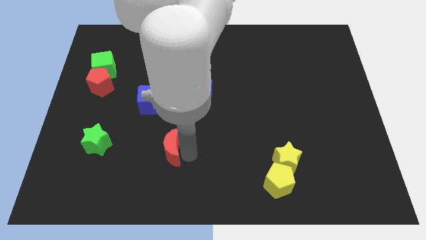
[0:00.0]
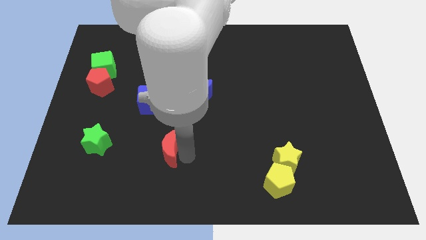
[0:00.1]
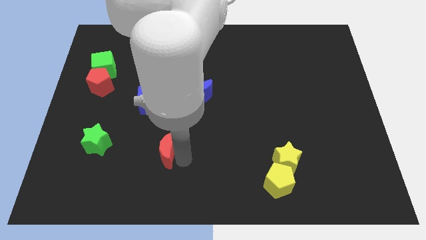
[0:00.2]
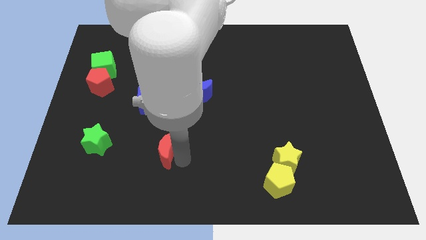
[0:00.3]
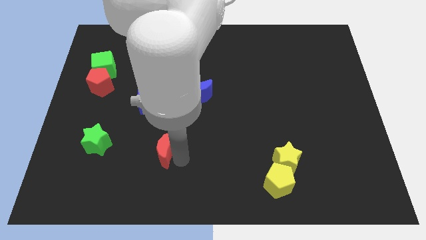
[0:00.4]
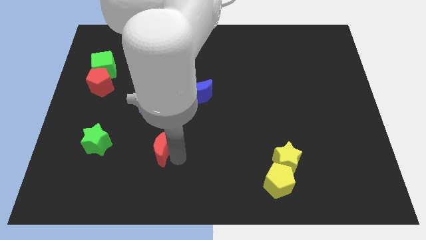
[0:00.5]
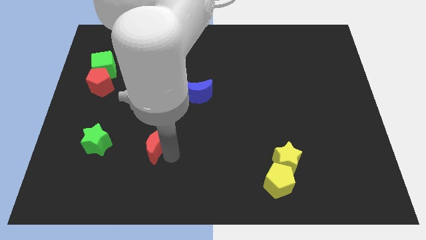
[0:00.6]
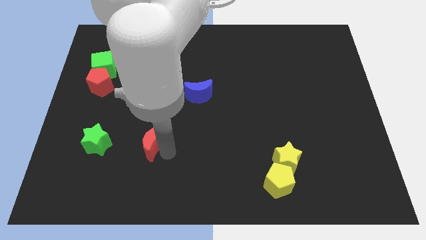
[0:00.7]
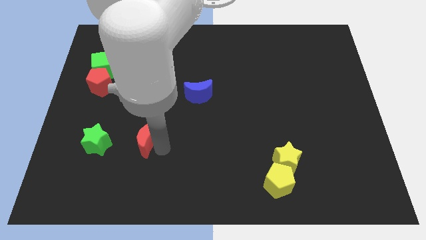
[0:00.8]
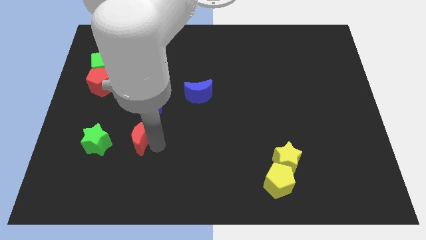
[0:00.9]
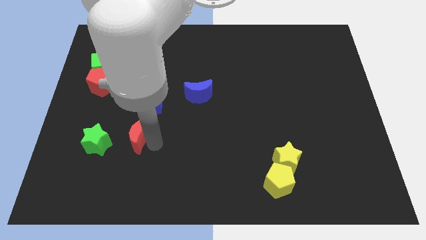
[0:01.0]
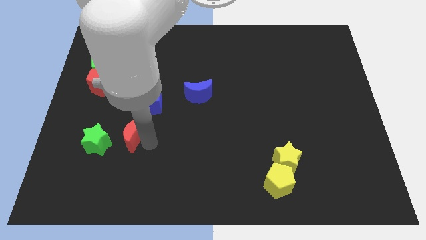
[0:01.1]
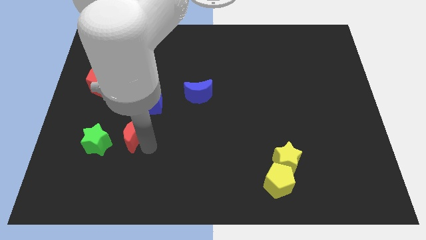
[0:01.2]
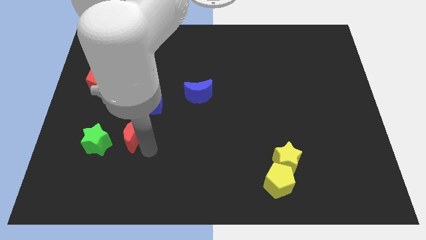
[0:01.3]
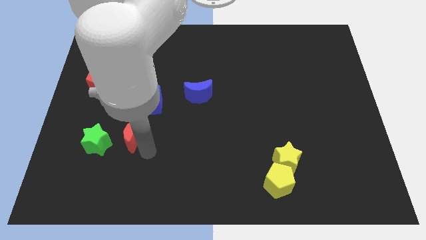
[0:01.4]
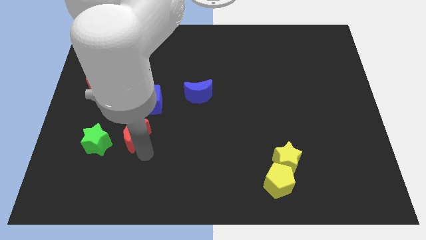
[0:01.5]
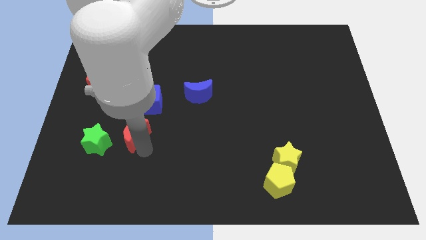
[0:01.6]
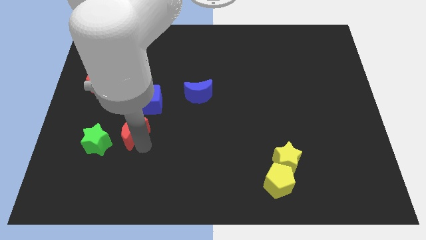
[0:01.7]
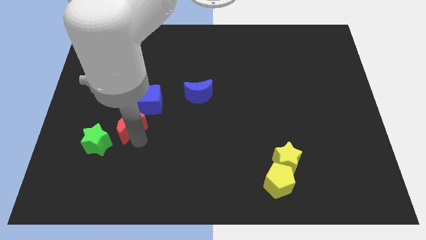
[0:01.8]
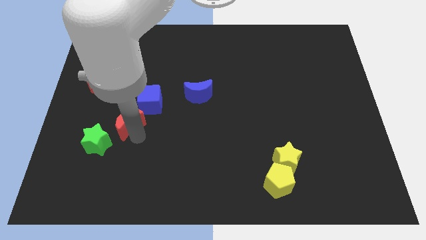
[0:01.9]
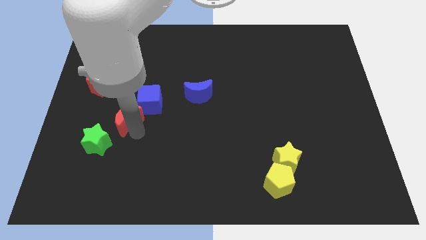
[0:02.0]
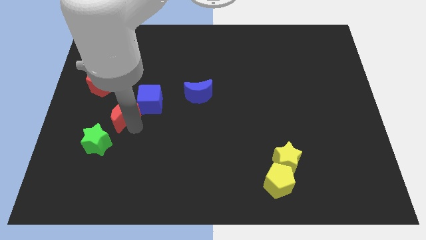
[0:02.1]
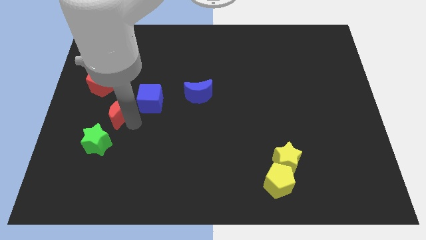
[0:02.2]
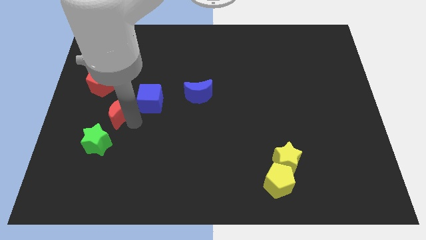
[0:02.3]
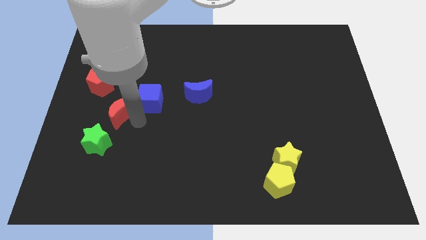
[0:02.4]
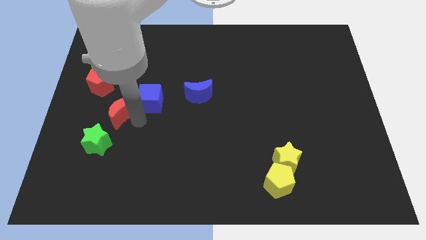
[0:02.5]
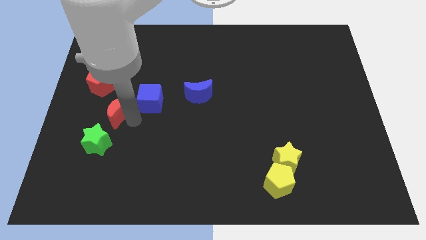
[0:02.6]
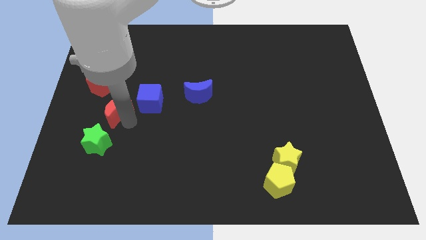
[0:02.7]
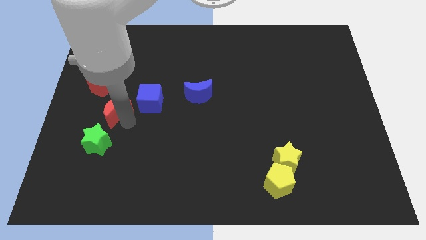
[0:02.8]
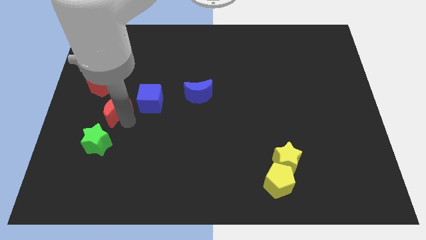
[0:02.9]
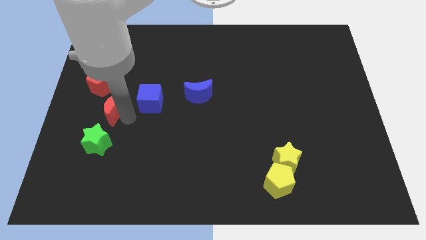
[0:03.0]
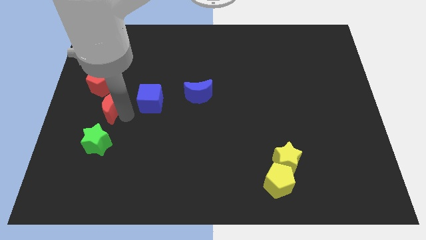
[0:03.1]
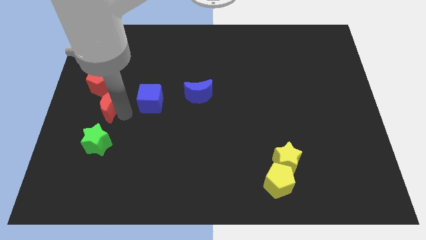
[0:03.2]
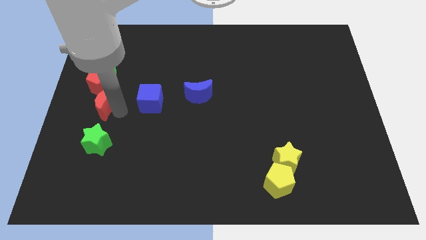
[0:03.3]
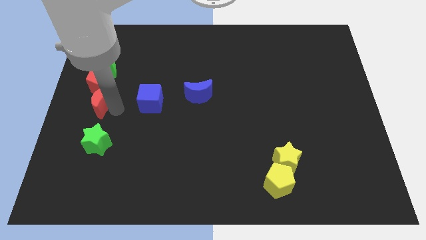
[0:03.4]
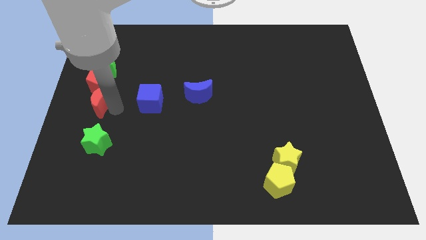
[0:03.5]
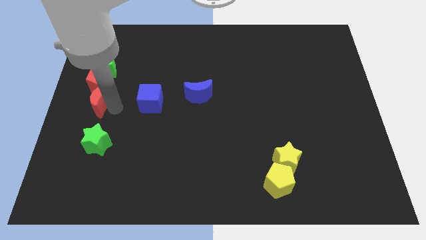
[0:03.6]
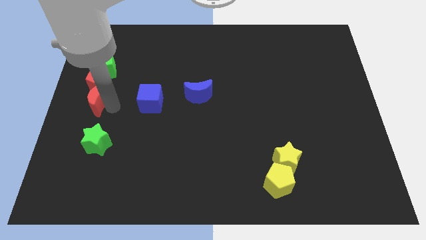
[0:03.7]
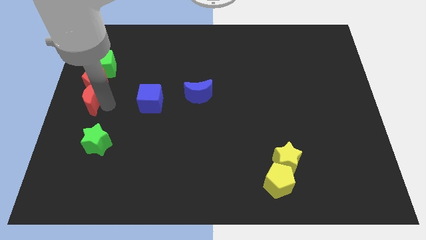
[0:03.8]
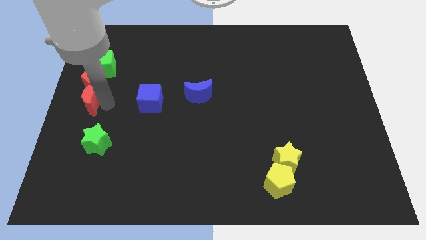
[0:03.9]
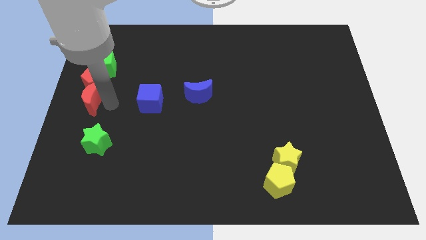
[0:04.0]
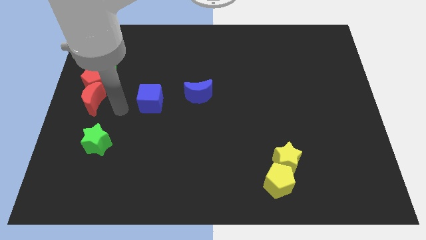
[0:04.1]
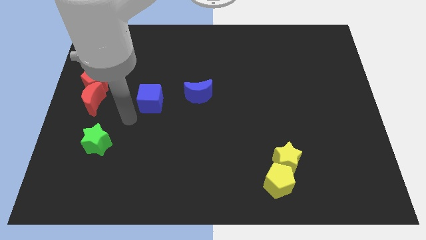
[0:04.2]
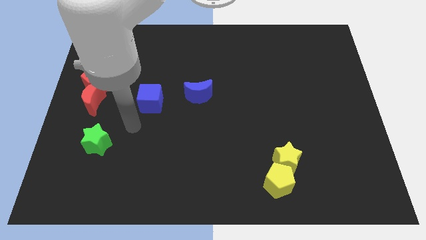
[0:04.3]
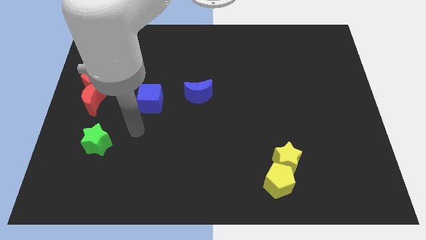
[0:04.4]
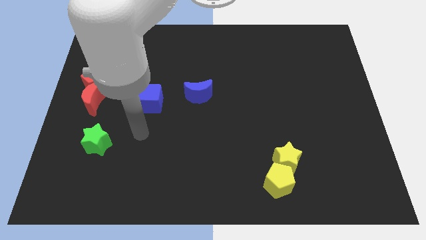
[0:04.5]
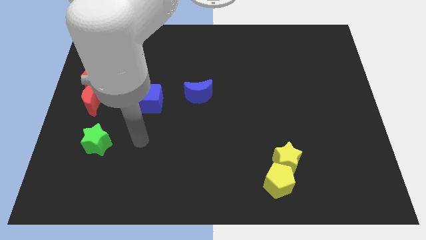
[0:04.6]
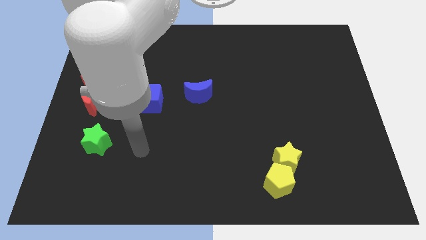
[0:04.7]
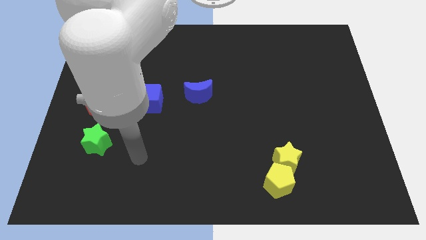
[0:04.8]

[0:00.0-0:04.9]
move the red crescent below the red pentagon

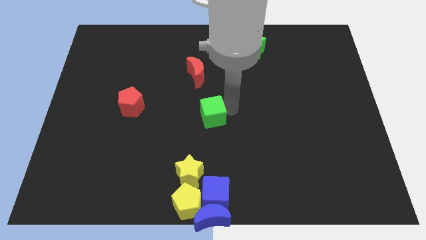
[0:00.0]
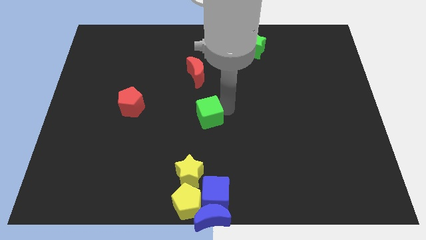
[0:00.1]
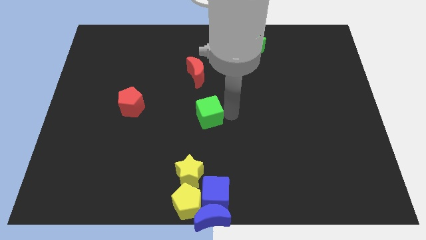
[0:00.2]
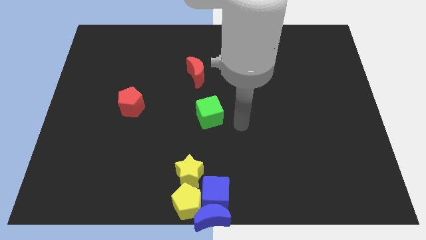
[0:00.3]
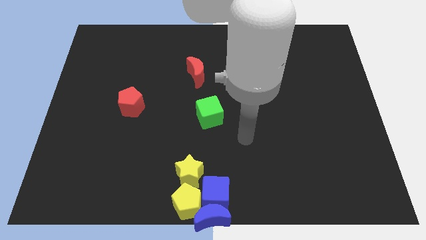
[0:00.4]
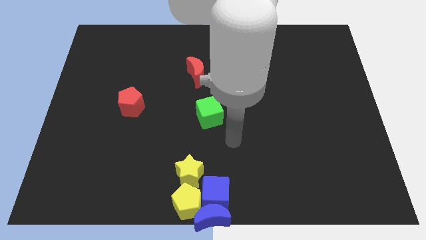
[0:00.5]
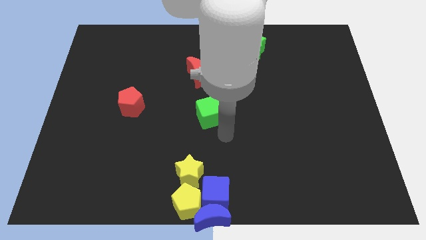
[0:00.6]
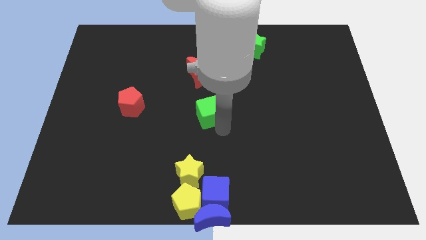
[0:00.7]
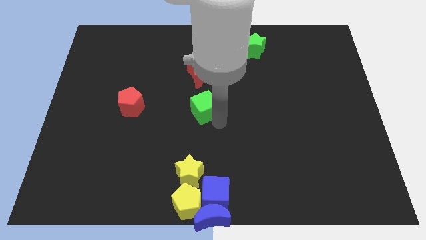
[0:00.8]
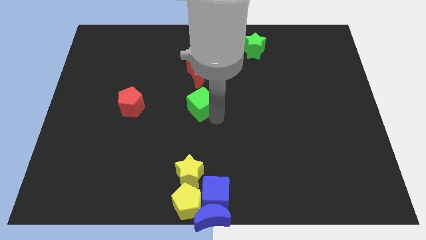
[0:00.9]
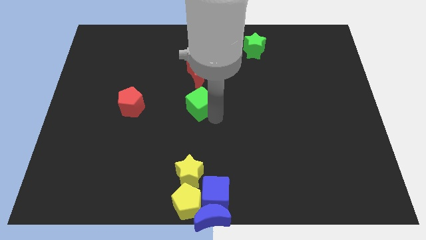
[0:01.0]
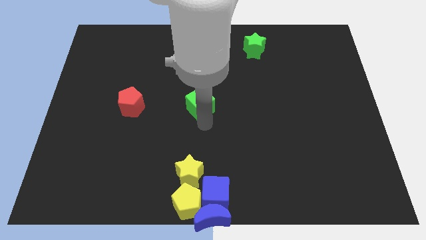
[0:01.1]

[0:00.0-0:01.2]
slide the green cube to the bottom of the red crescent

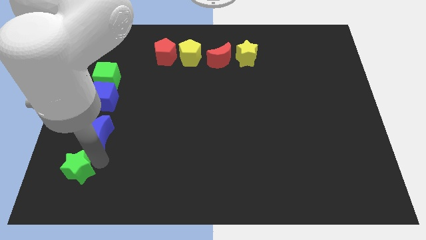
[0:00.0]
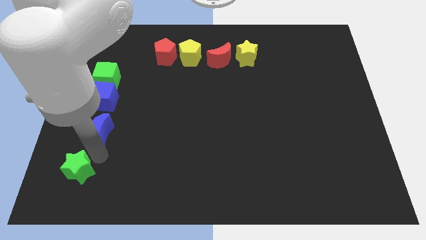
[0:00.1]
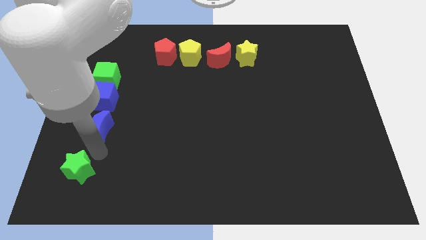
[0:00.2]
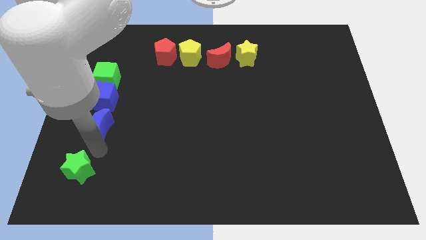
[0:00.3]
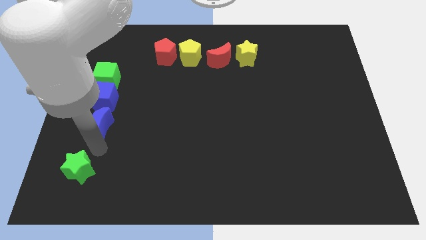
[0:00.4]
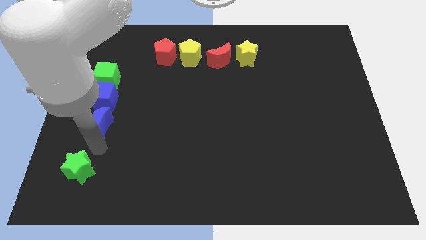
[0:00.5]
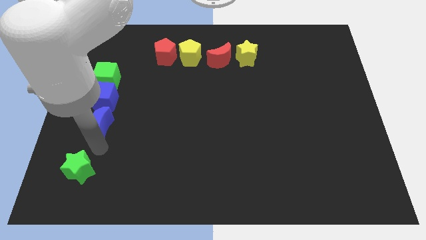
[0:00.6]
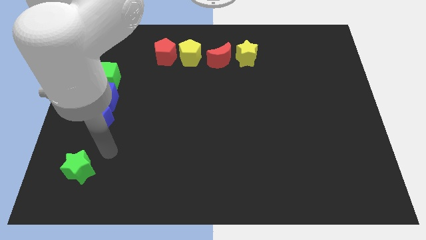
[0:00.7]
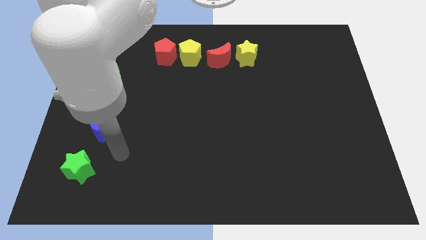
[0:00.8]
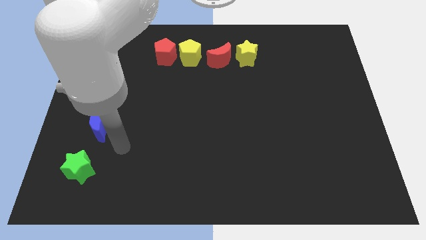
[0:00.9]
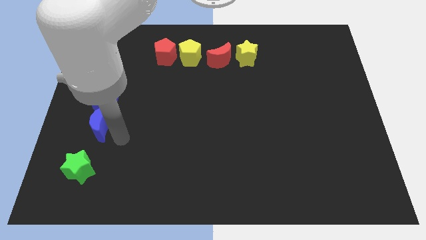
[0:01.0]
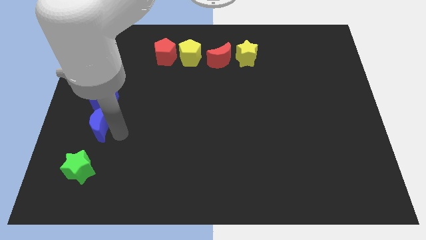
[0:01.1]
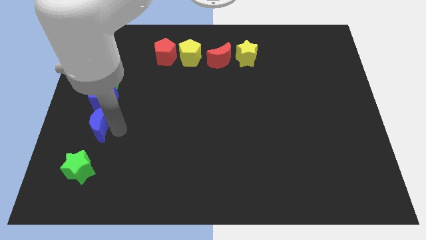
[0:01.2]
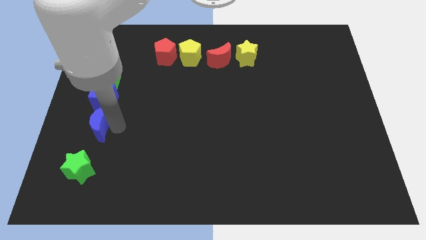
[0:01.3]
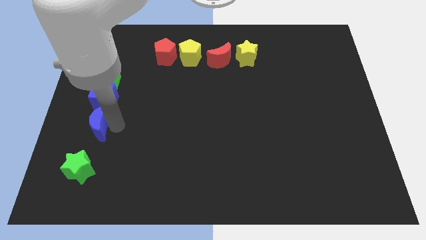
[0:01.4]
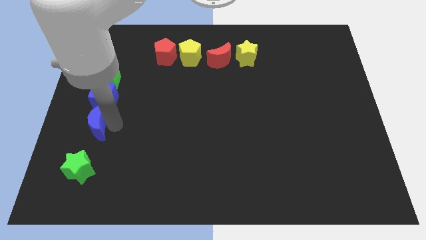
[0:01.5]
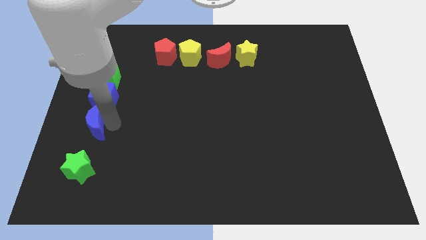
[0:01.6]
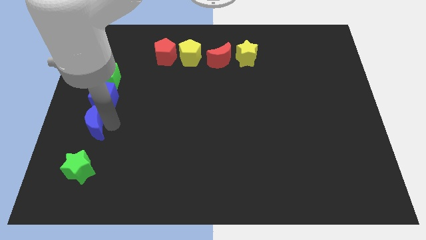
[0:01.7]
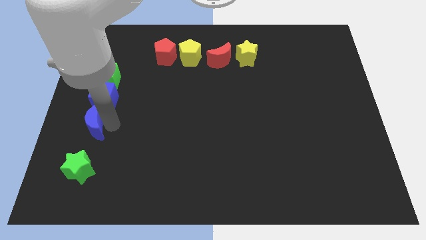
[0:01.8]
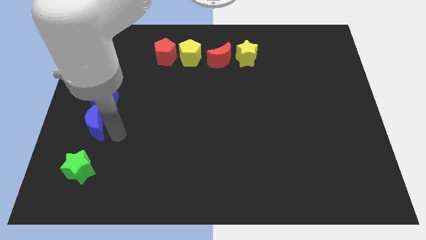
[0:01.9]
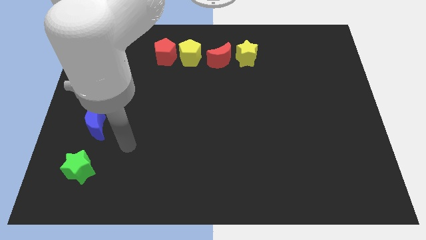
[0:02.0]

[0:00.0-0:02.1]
push the blue crescent towards the blue cube

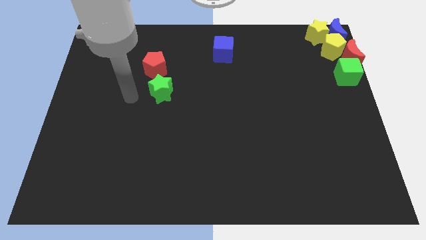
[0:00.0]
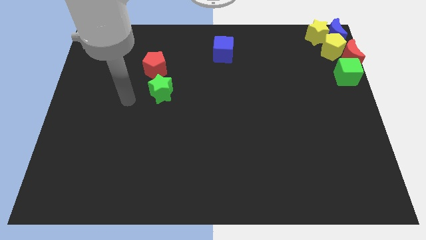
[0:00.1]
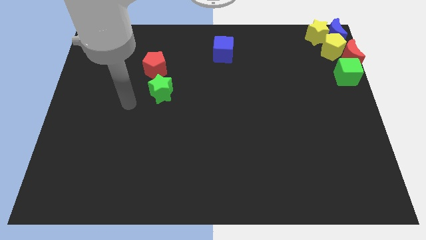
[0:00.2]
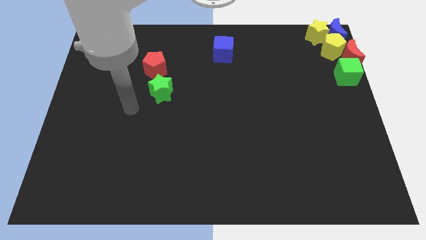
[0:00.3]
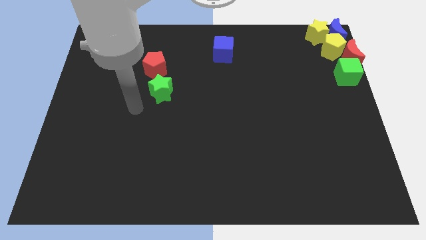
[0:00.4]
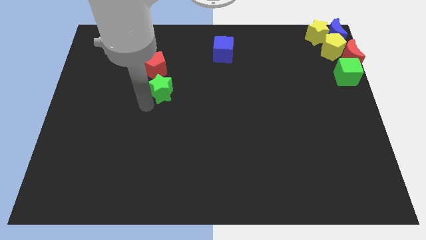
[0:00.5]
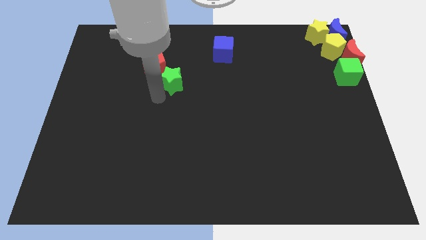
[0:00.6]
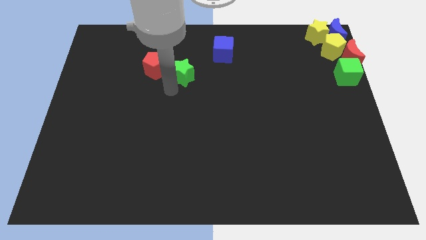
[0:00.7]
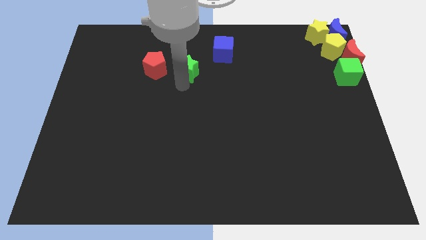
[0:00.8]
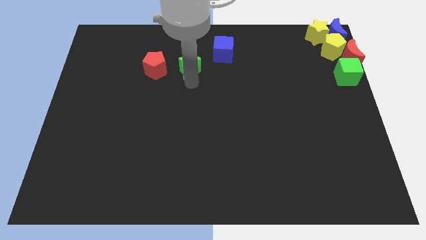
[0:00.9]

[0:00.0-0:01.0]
place the green star diagonally bottom left to the blue cube
